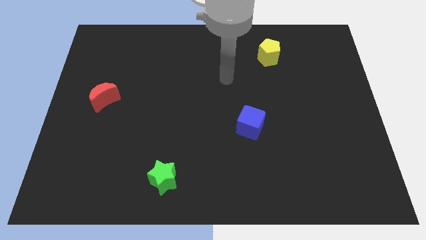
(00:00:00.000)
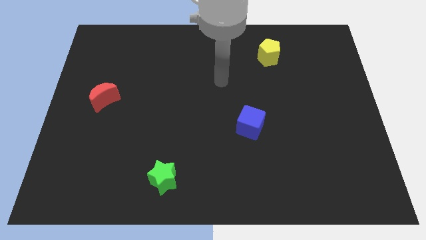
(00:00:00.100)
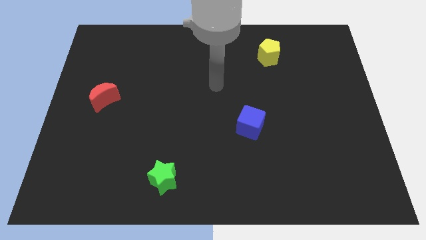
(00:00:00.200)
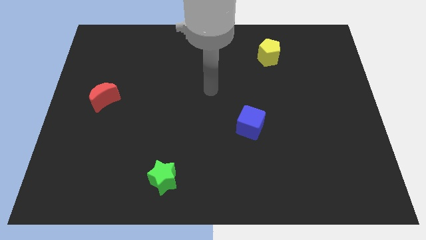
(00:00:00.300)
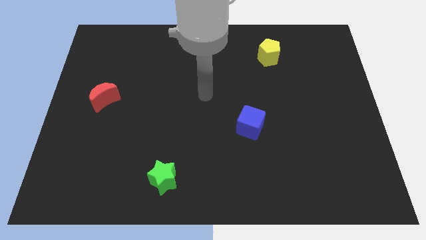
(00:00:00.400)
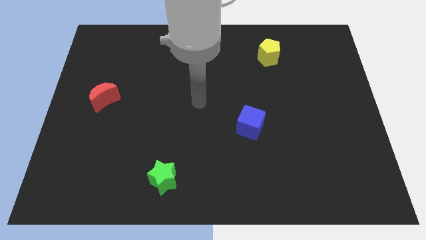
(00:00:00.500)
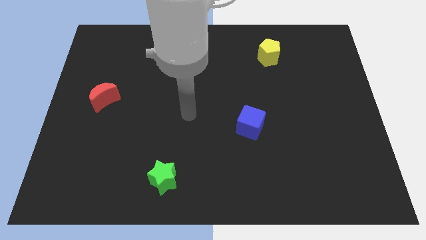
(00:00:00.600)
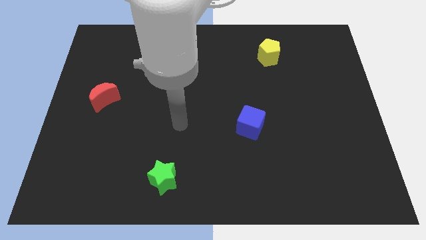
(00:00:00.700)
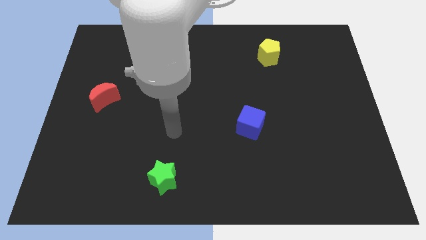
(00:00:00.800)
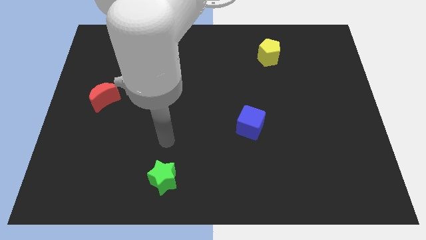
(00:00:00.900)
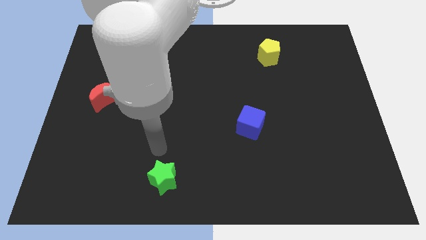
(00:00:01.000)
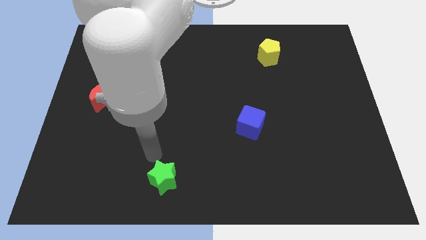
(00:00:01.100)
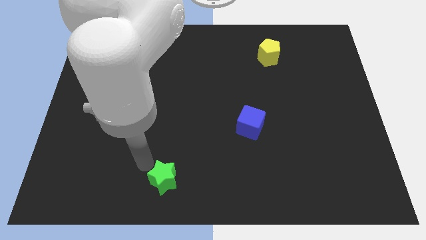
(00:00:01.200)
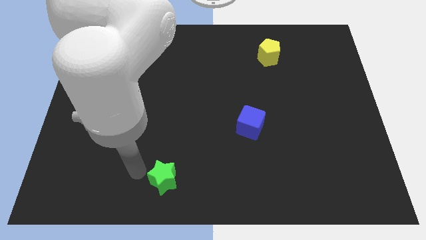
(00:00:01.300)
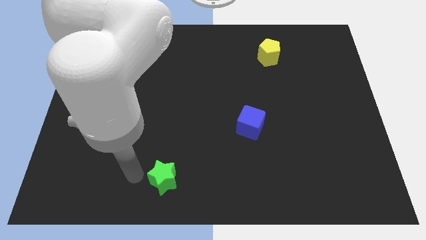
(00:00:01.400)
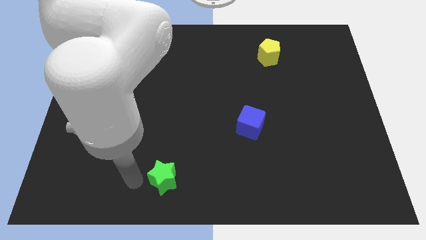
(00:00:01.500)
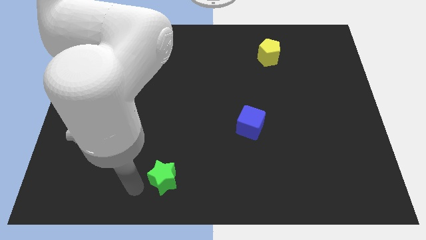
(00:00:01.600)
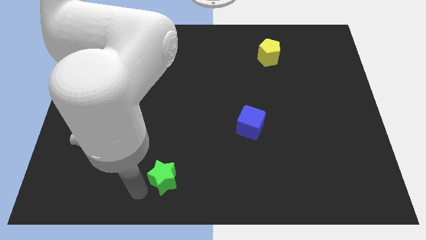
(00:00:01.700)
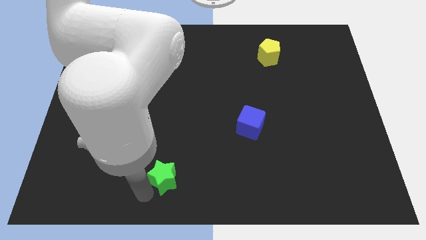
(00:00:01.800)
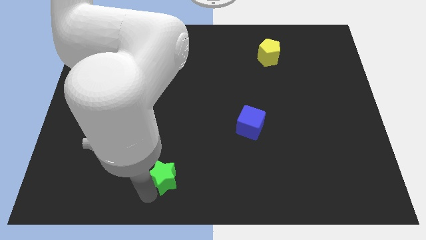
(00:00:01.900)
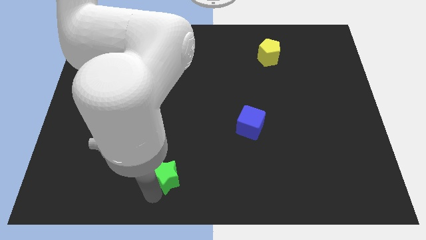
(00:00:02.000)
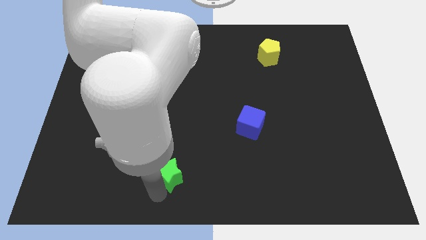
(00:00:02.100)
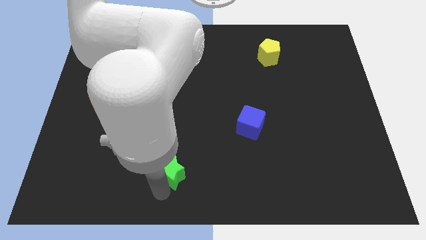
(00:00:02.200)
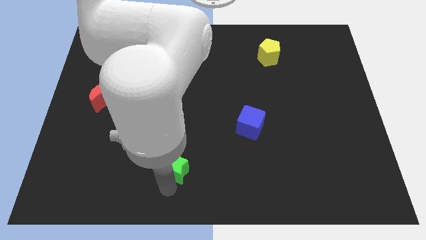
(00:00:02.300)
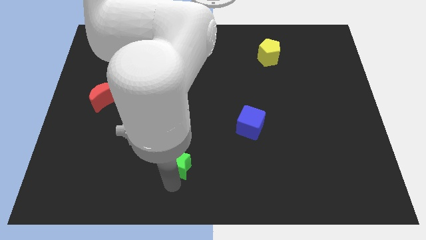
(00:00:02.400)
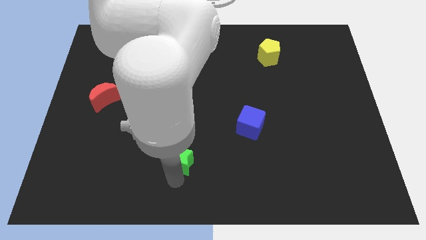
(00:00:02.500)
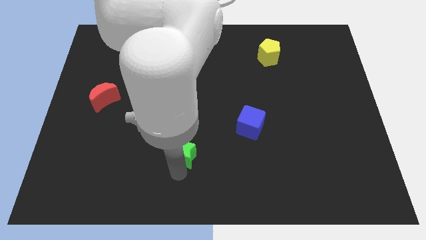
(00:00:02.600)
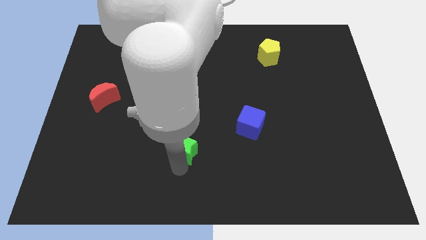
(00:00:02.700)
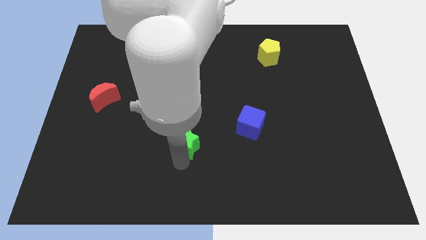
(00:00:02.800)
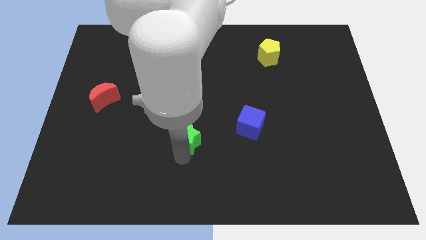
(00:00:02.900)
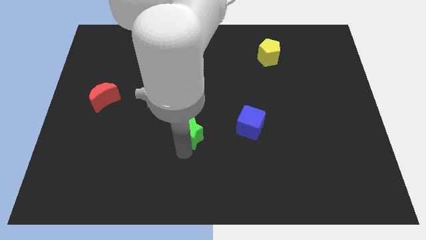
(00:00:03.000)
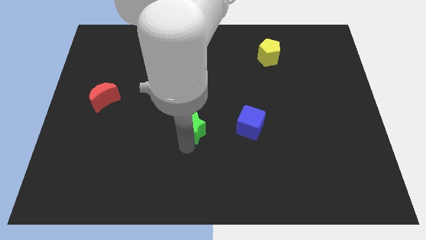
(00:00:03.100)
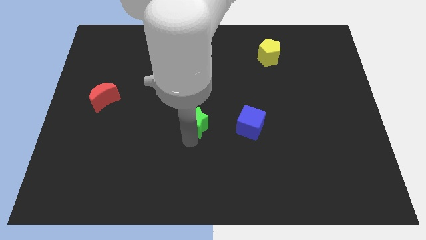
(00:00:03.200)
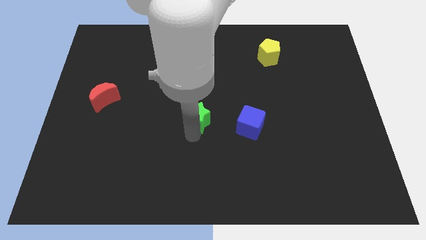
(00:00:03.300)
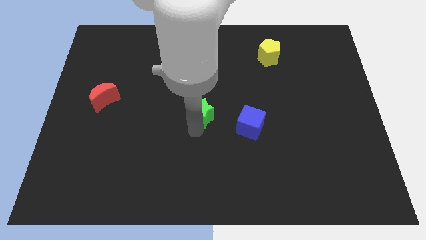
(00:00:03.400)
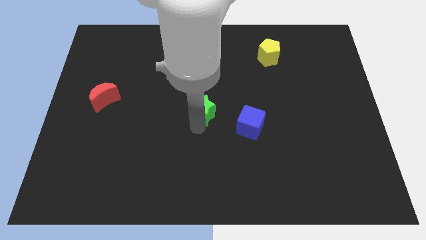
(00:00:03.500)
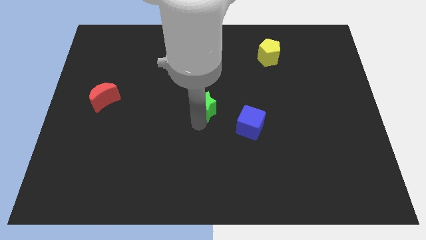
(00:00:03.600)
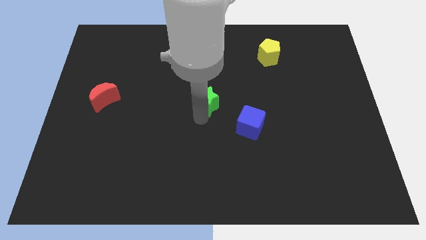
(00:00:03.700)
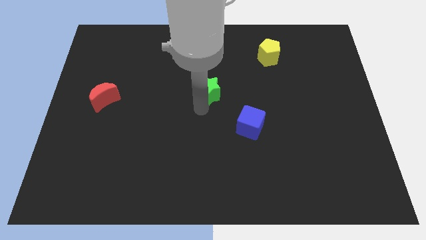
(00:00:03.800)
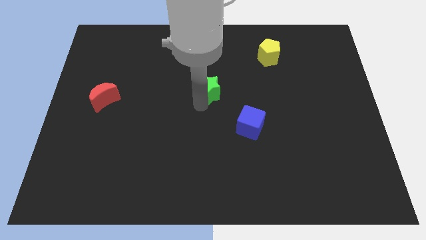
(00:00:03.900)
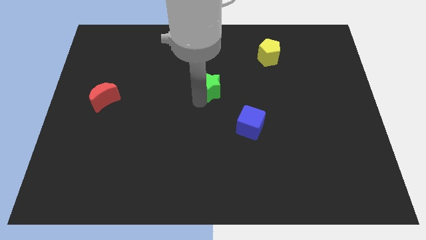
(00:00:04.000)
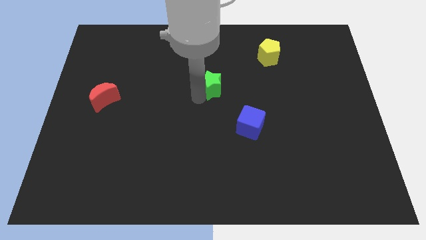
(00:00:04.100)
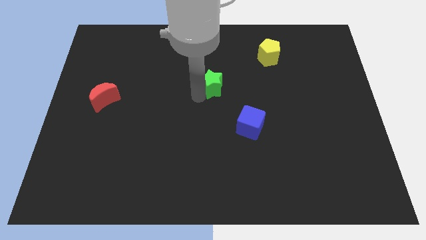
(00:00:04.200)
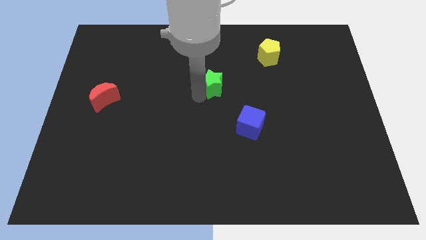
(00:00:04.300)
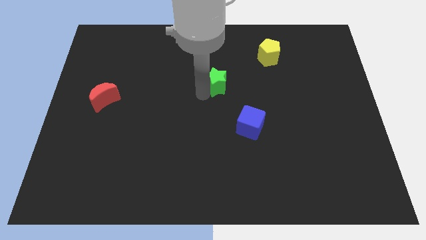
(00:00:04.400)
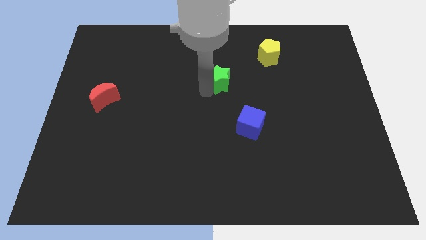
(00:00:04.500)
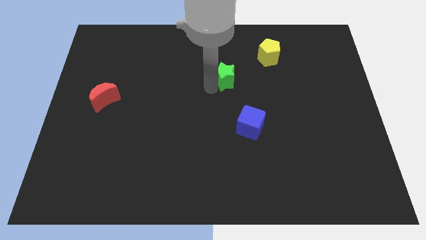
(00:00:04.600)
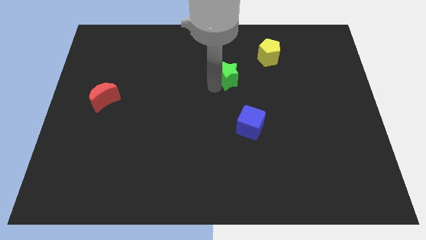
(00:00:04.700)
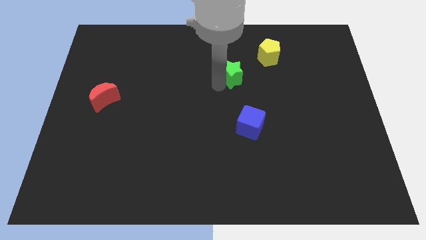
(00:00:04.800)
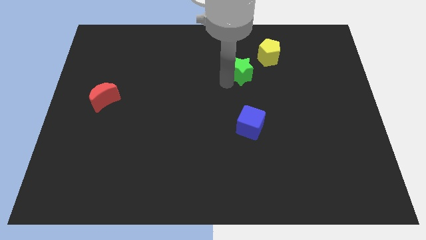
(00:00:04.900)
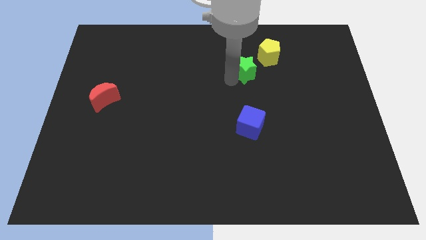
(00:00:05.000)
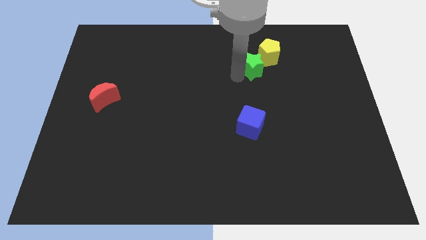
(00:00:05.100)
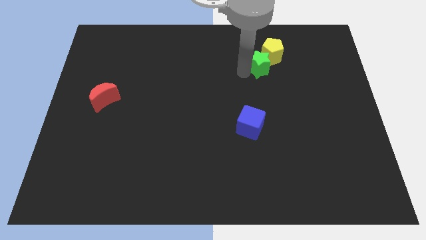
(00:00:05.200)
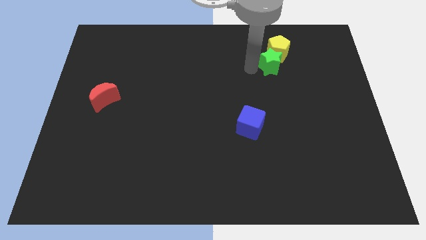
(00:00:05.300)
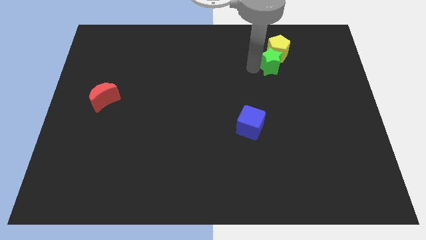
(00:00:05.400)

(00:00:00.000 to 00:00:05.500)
put the star next to the yellow pentagon

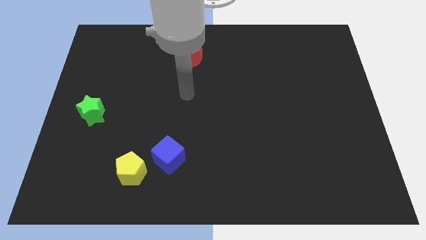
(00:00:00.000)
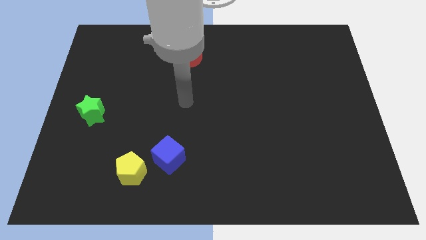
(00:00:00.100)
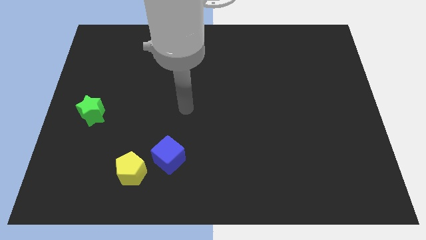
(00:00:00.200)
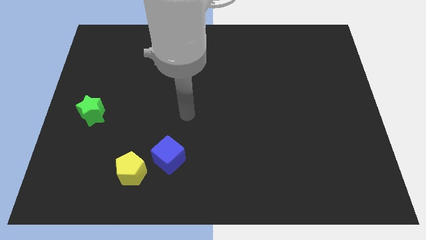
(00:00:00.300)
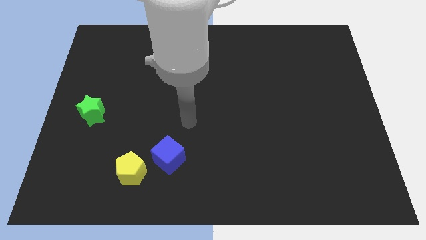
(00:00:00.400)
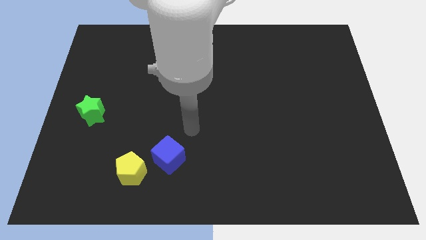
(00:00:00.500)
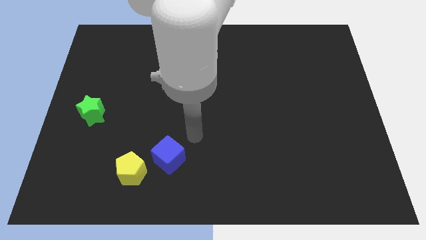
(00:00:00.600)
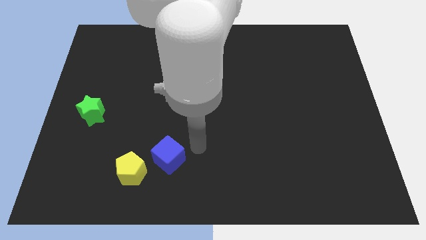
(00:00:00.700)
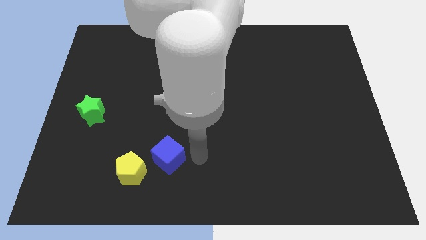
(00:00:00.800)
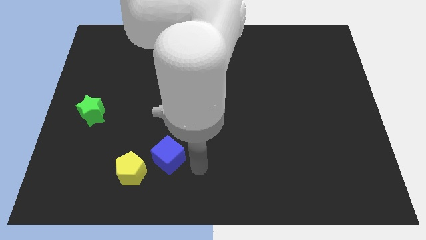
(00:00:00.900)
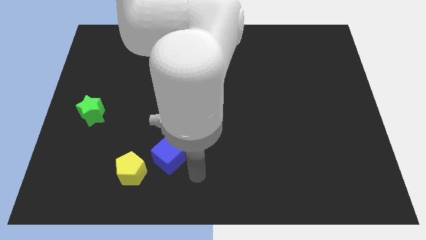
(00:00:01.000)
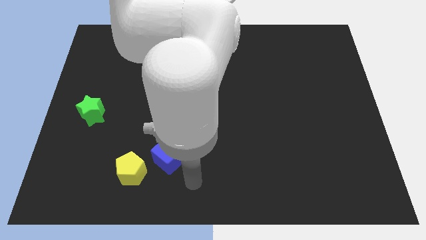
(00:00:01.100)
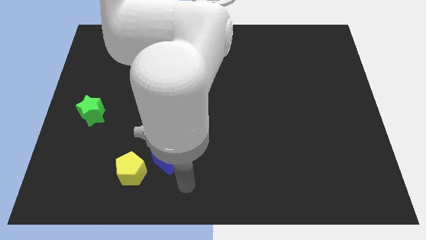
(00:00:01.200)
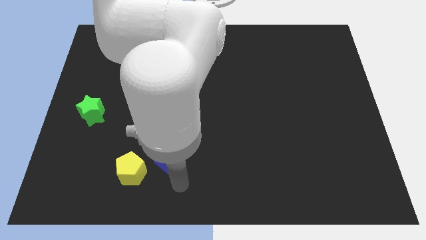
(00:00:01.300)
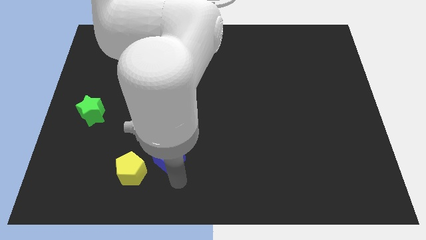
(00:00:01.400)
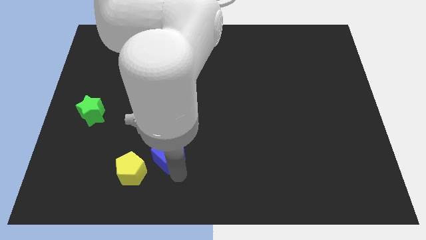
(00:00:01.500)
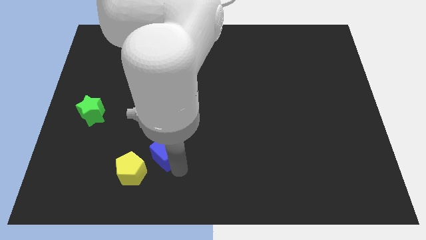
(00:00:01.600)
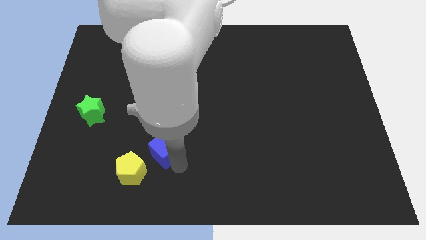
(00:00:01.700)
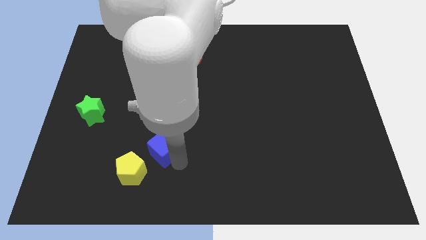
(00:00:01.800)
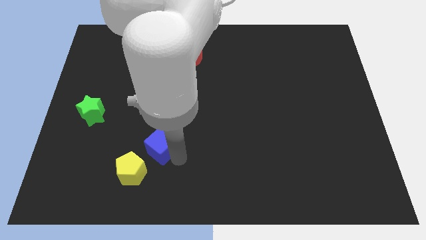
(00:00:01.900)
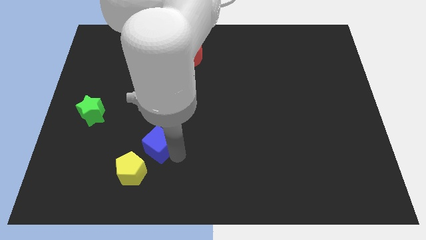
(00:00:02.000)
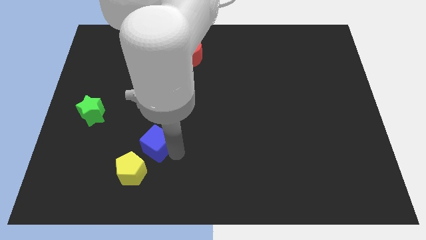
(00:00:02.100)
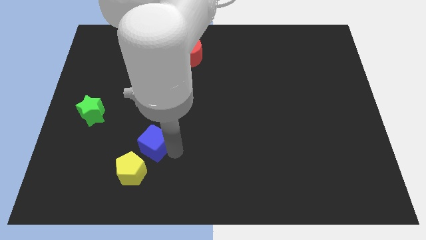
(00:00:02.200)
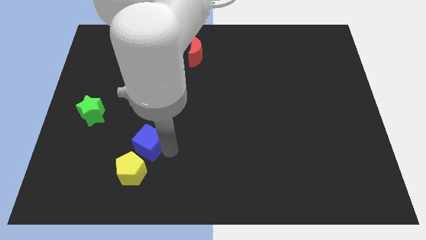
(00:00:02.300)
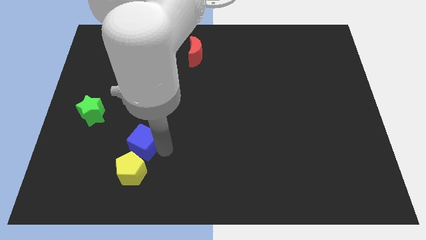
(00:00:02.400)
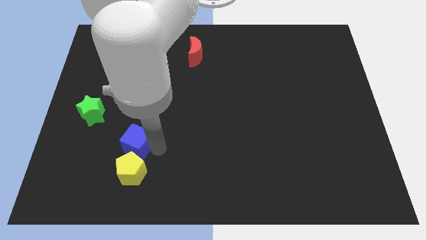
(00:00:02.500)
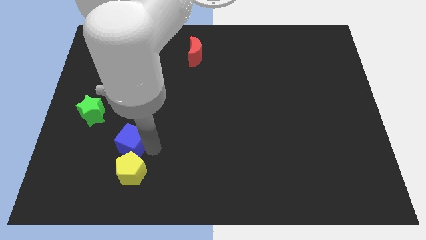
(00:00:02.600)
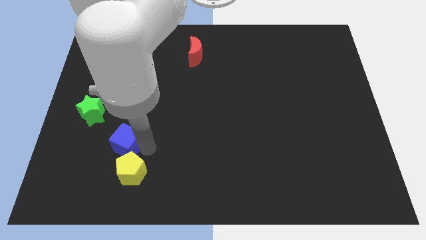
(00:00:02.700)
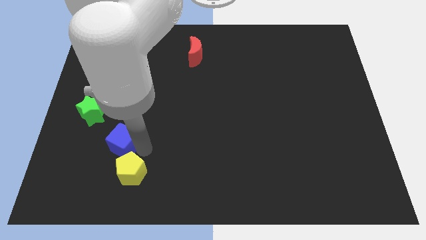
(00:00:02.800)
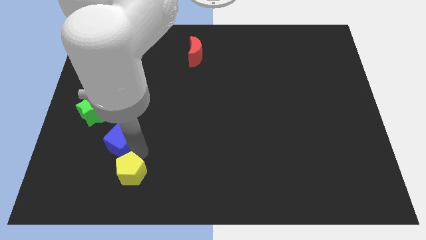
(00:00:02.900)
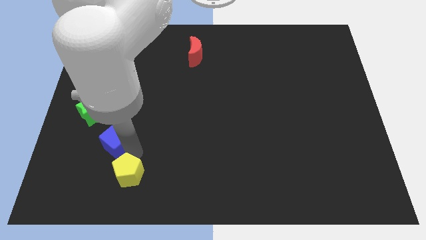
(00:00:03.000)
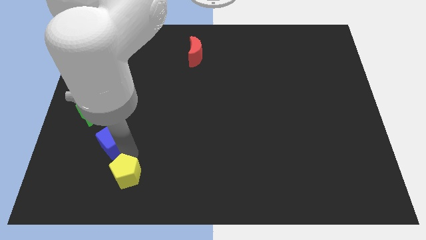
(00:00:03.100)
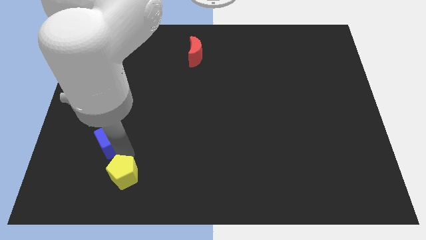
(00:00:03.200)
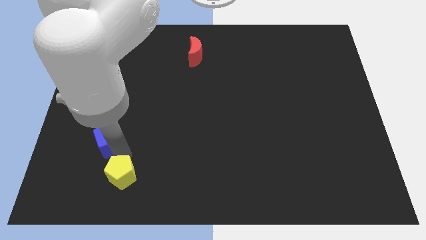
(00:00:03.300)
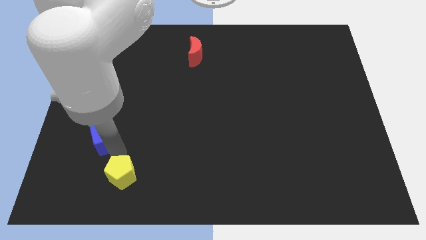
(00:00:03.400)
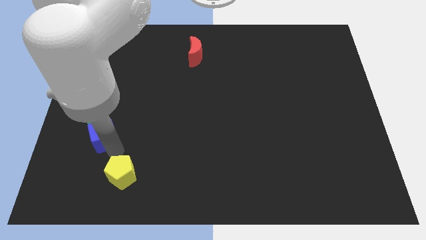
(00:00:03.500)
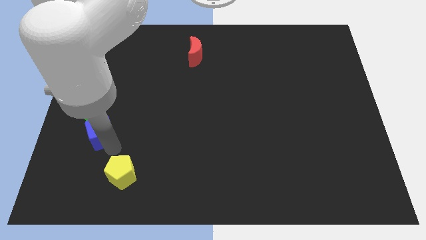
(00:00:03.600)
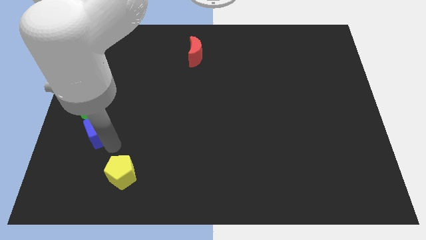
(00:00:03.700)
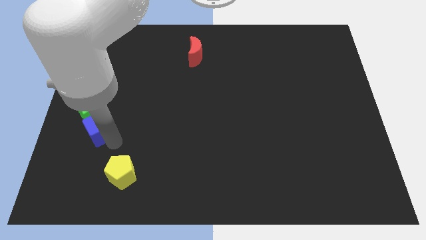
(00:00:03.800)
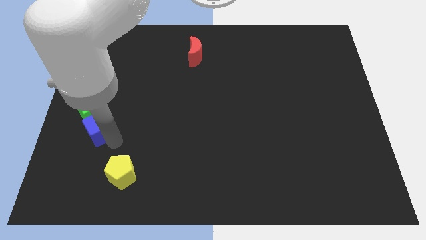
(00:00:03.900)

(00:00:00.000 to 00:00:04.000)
put the blue cube to the green star
